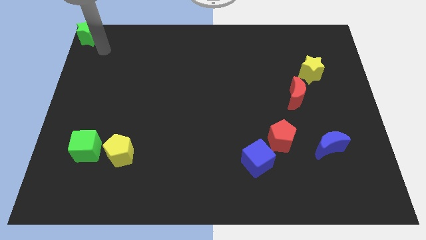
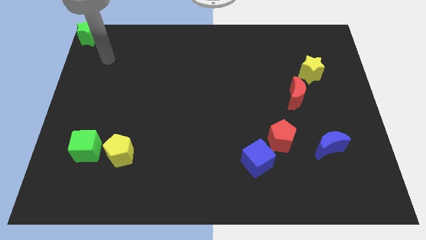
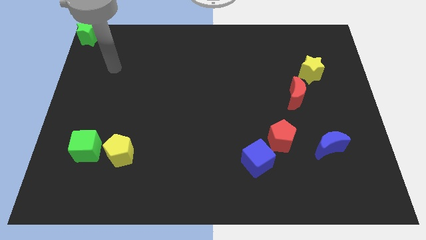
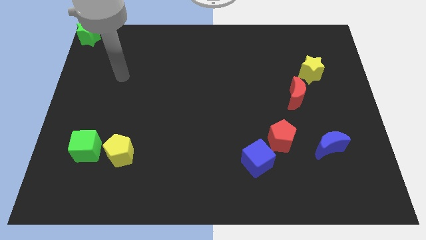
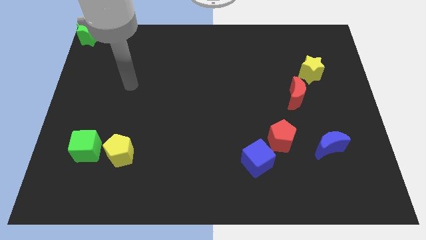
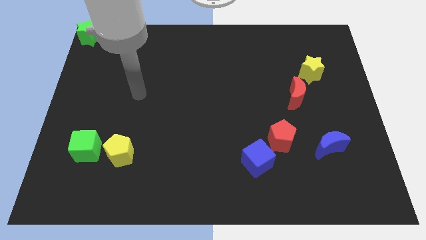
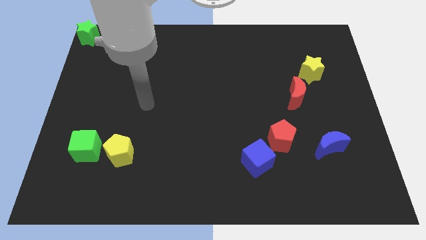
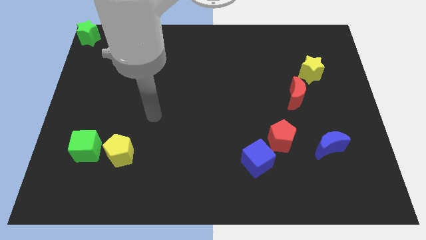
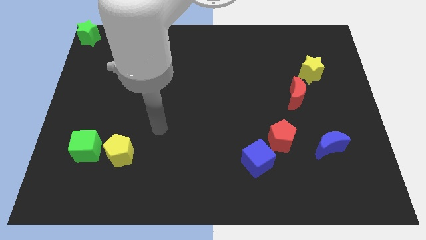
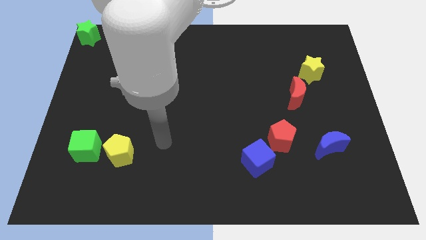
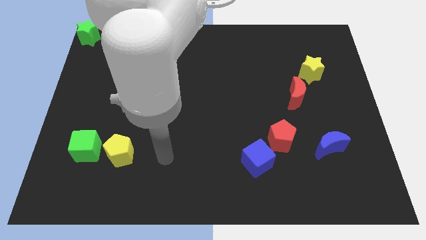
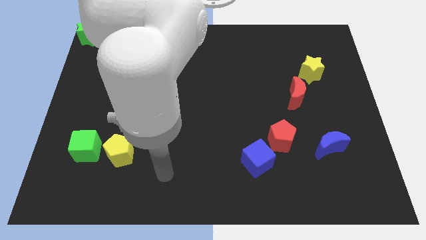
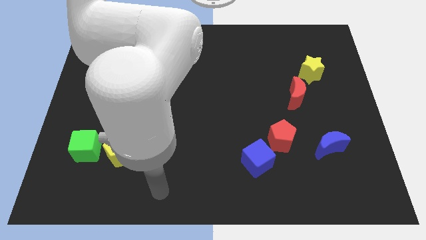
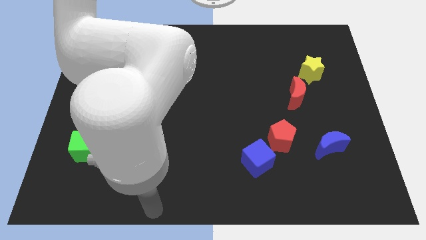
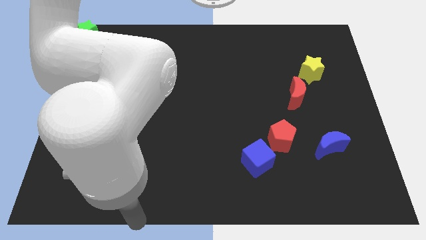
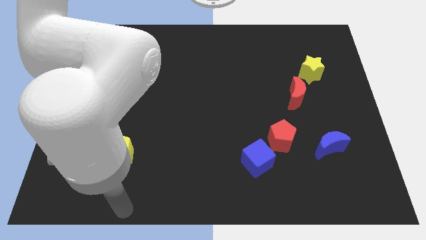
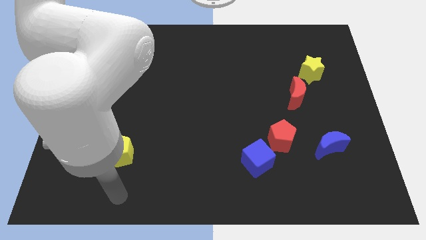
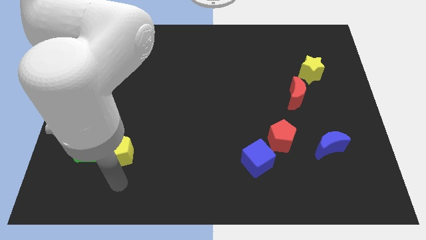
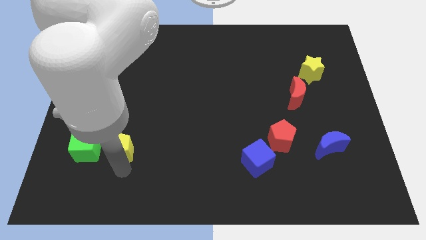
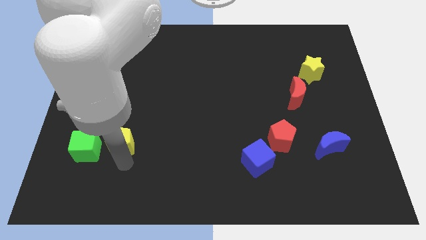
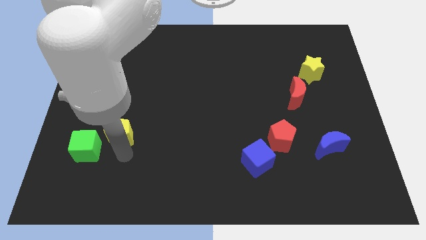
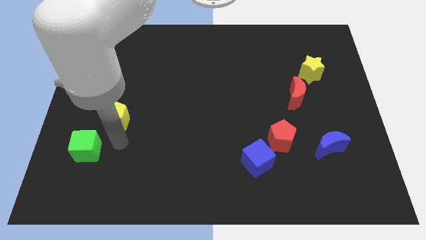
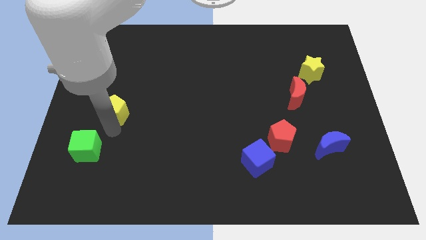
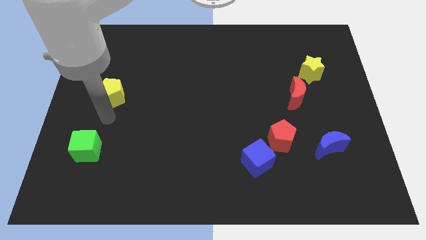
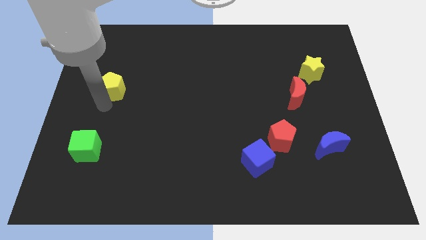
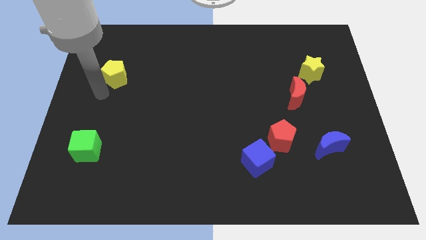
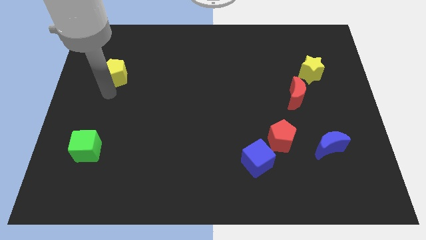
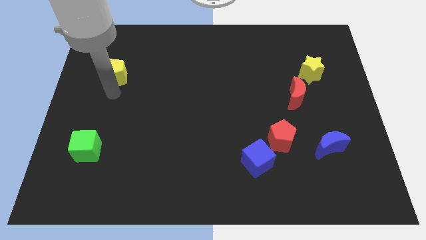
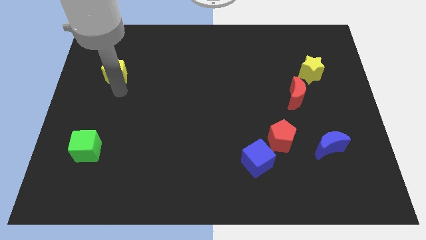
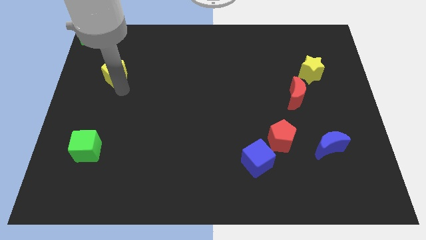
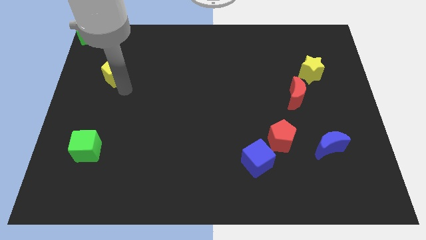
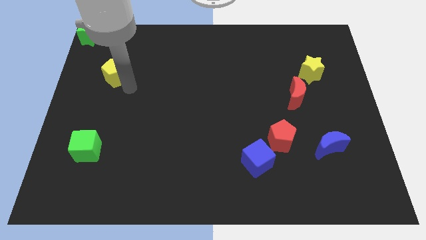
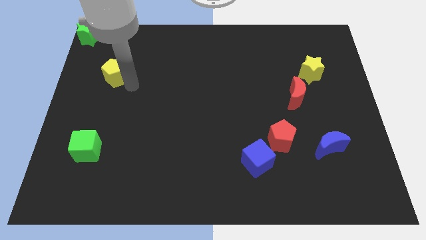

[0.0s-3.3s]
place the yellow pentagon diagonally below green star

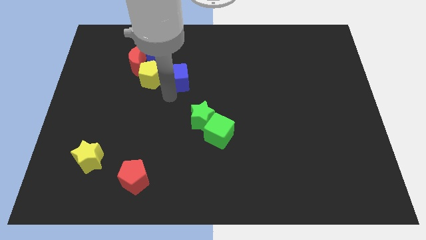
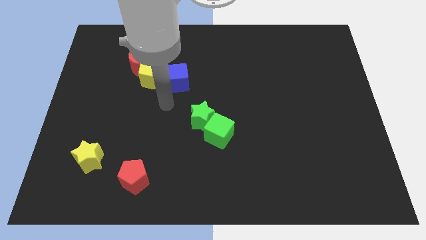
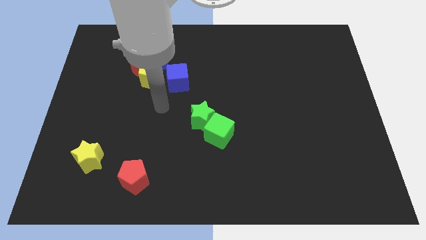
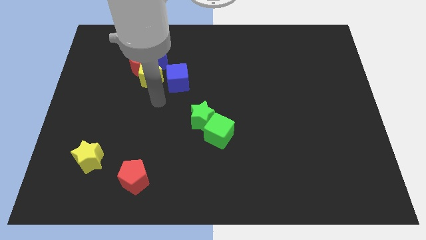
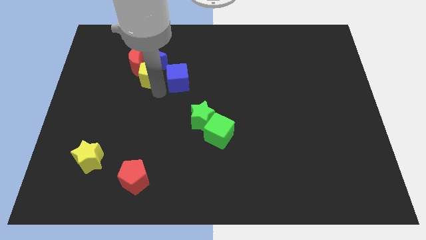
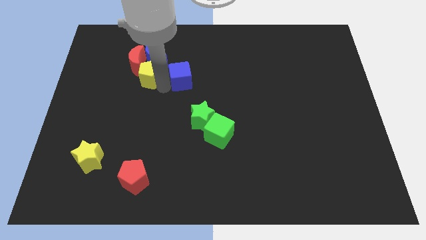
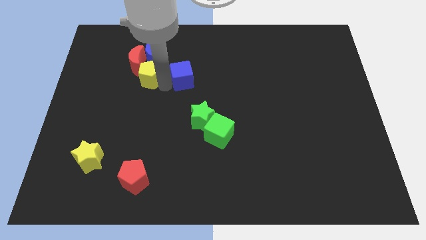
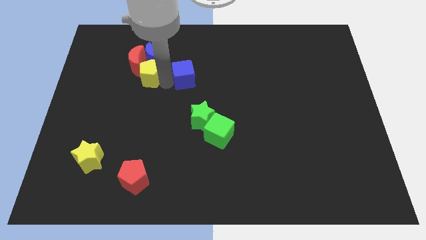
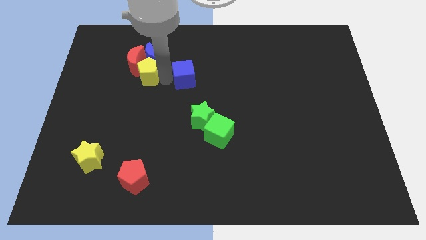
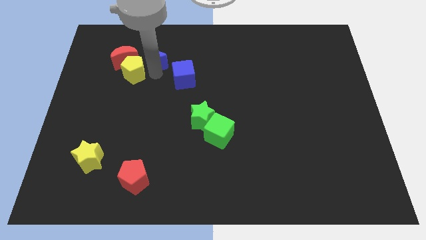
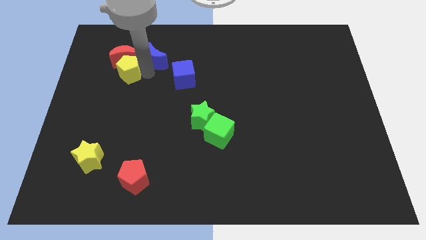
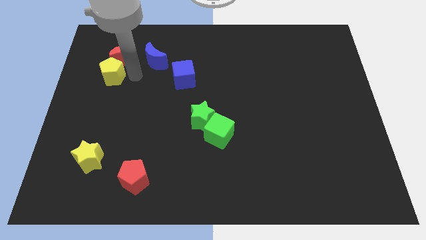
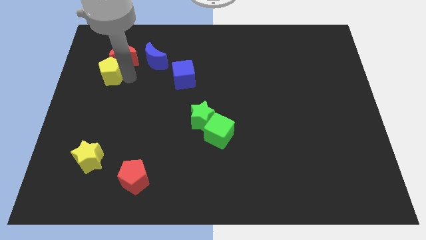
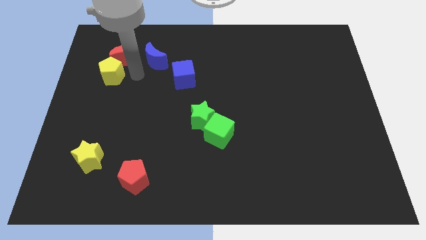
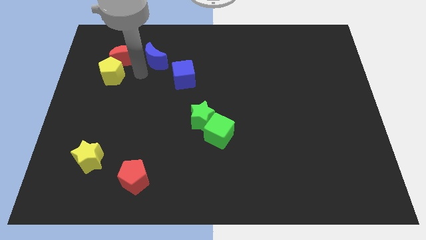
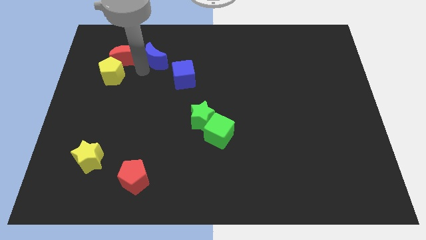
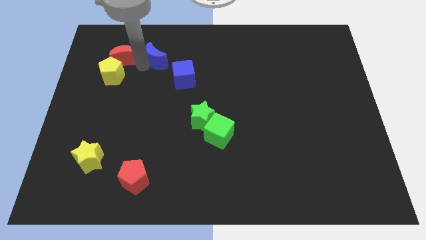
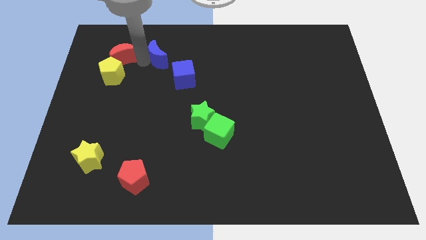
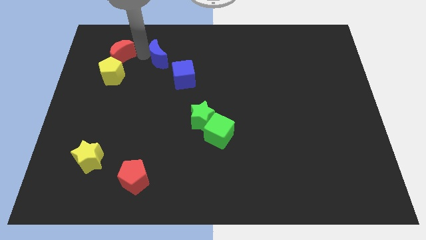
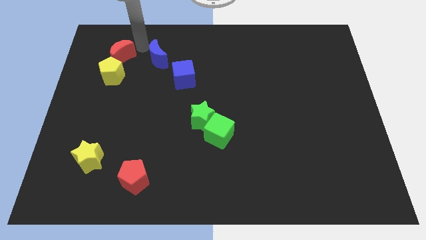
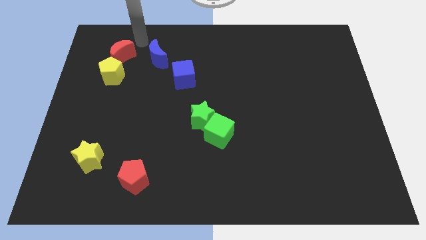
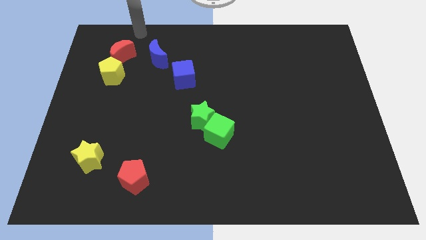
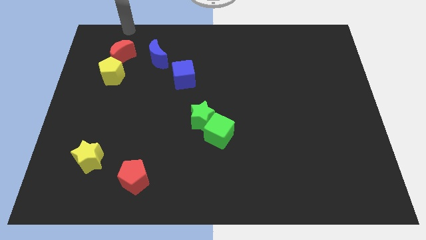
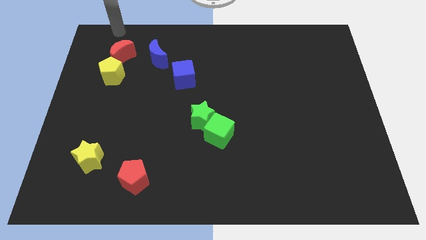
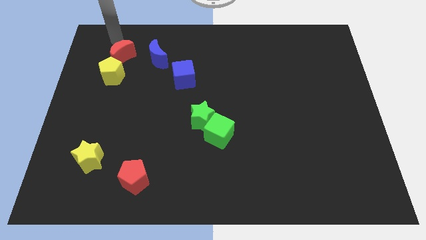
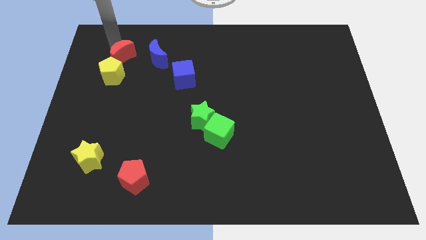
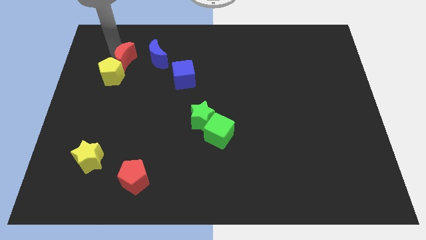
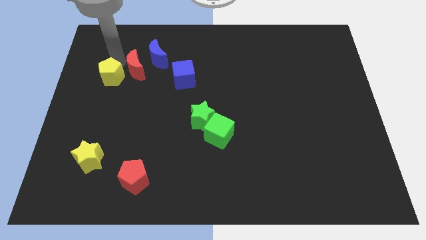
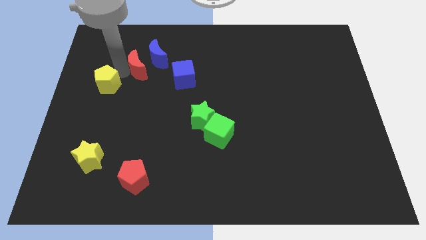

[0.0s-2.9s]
place red crescent in between blue crescent and yellow pentagon

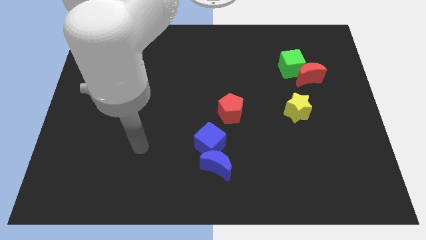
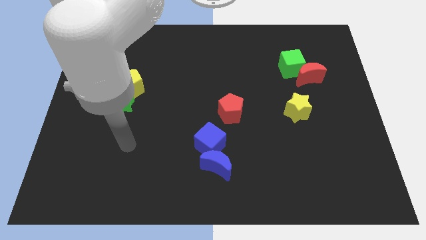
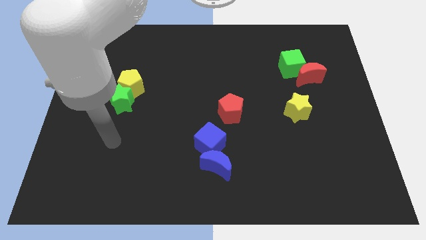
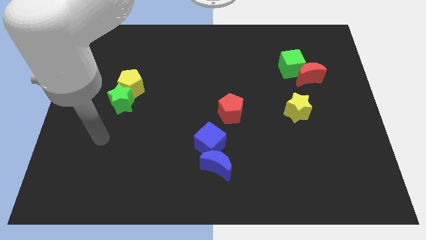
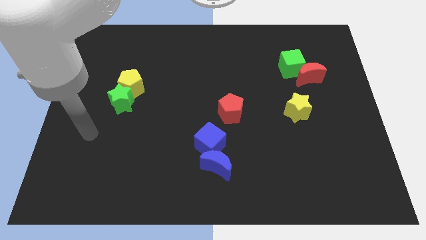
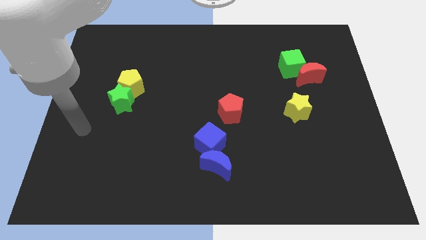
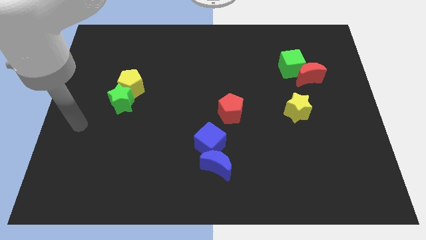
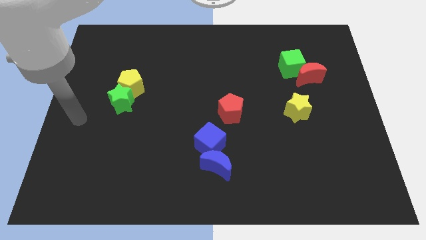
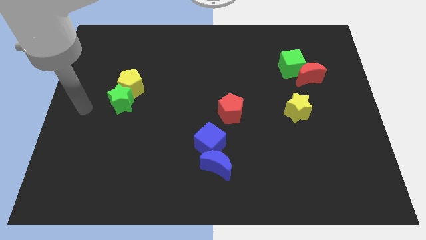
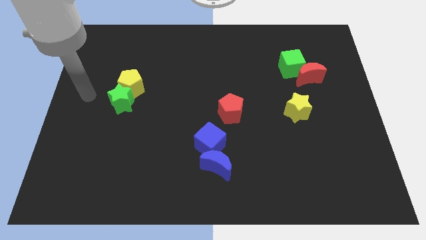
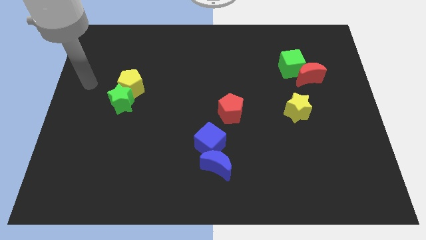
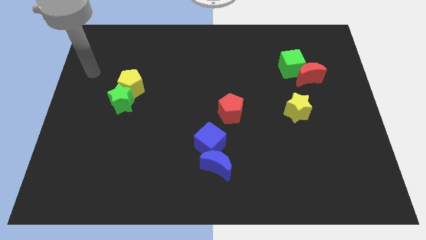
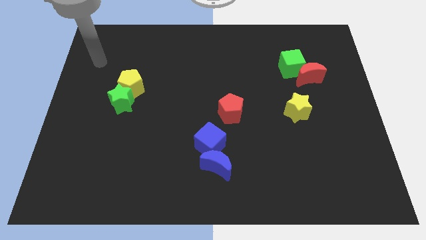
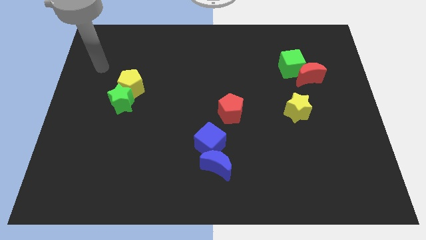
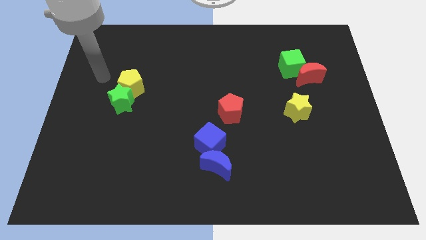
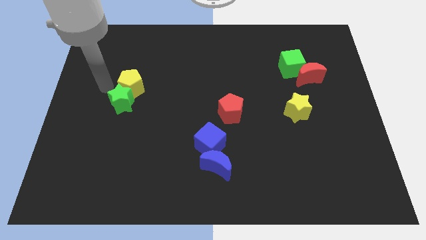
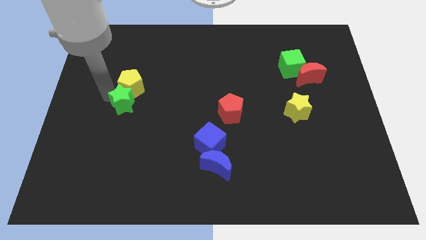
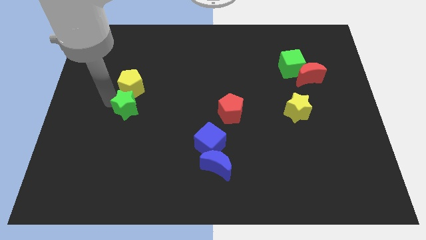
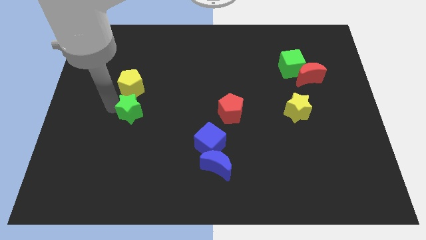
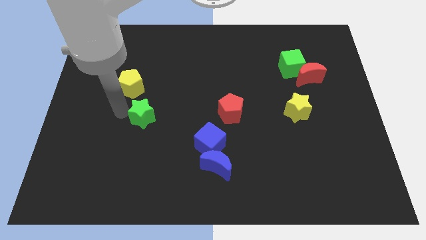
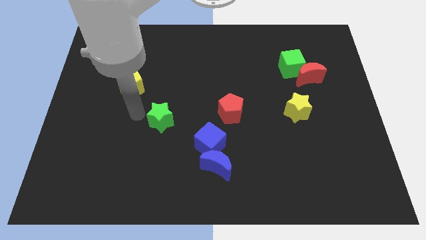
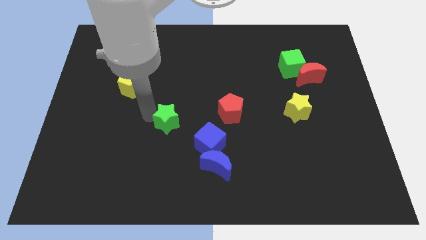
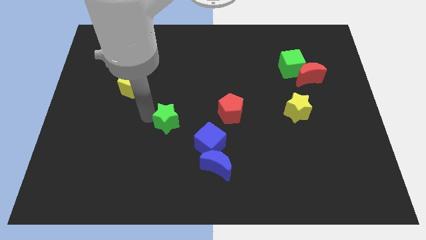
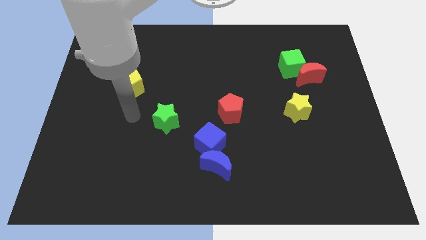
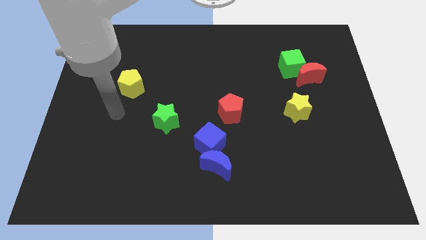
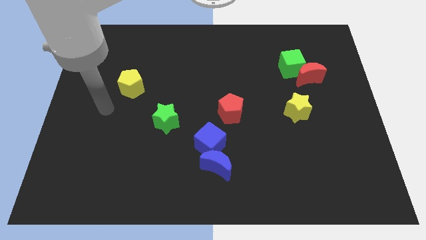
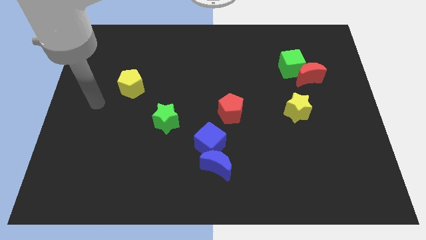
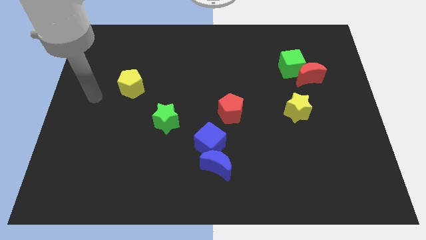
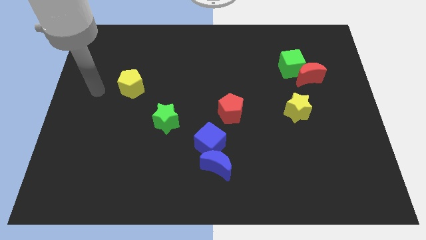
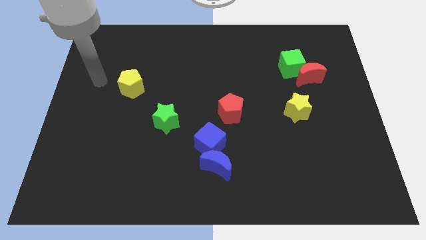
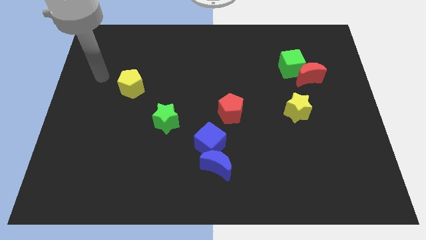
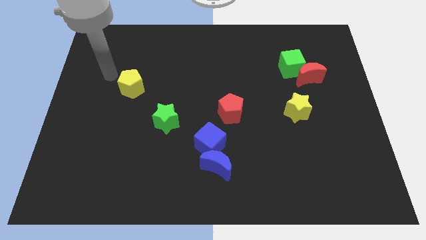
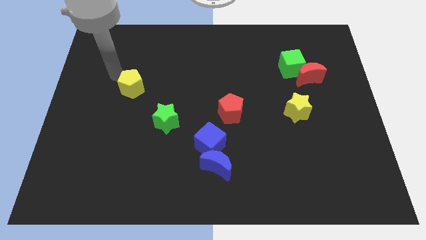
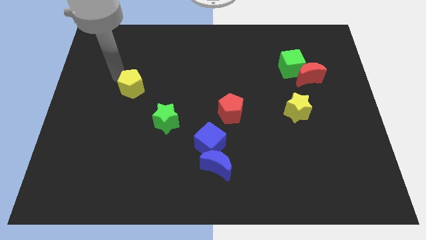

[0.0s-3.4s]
move the green star diagonally to the yellow pentagon
